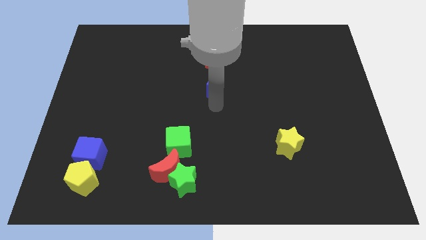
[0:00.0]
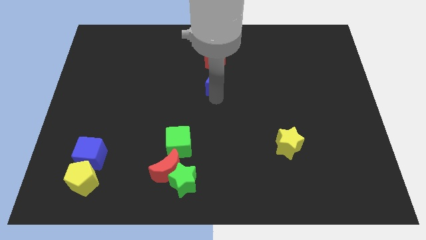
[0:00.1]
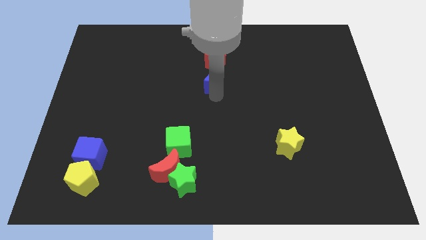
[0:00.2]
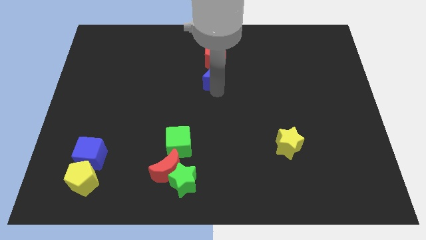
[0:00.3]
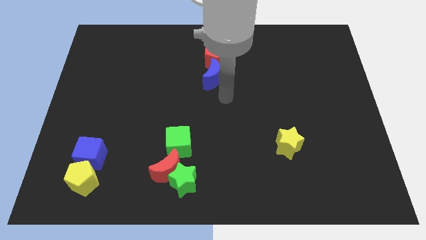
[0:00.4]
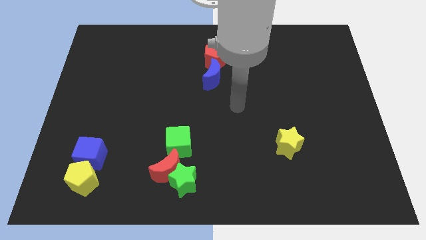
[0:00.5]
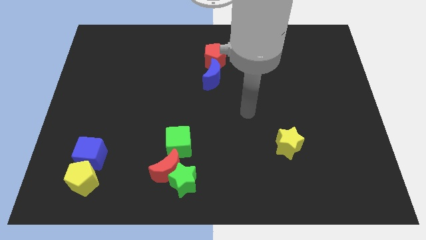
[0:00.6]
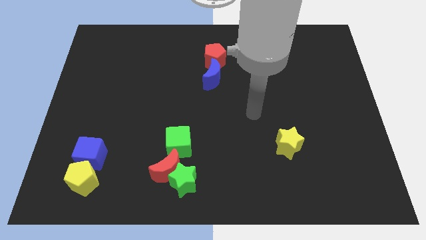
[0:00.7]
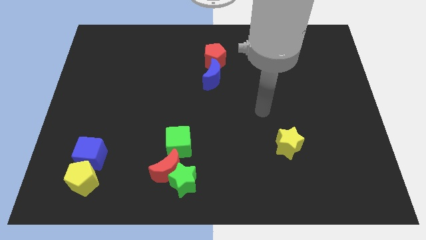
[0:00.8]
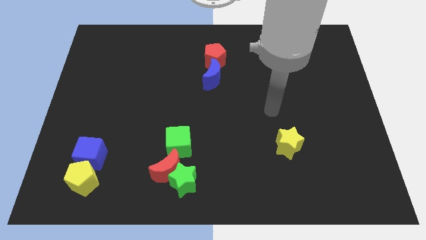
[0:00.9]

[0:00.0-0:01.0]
push blue moon in to red pentagon

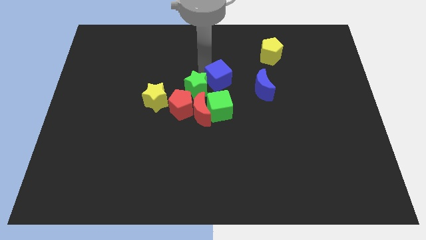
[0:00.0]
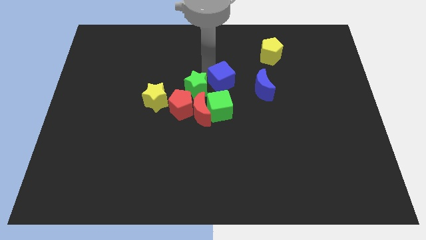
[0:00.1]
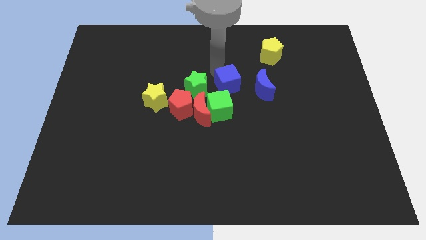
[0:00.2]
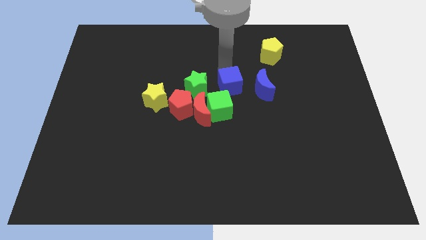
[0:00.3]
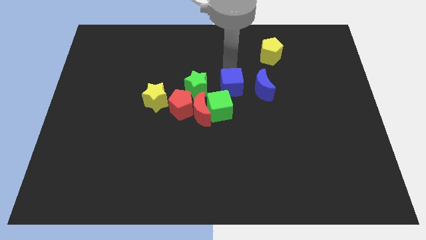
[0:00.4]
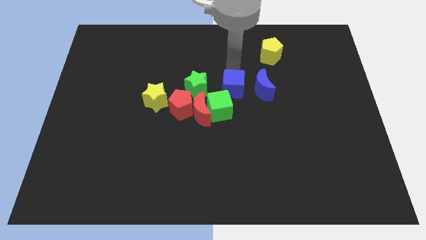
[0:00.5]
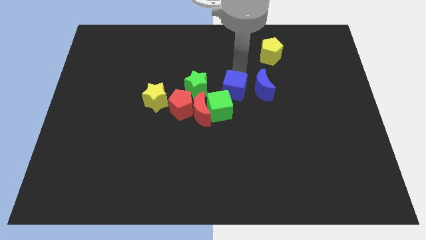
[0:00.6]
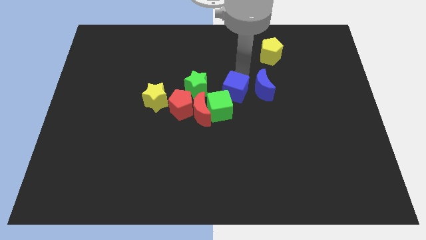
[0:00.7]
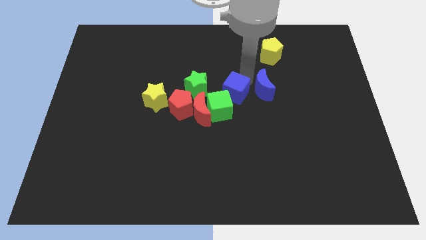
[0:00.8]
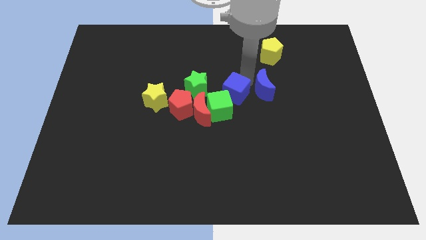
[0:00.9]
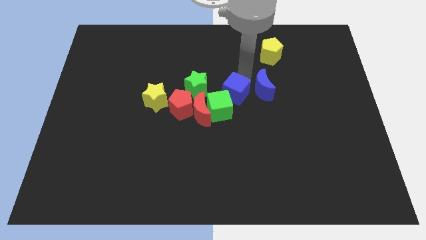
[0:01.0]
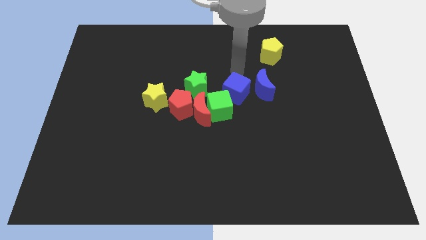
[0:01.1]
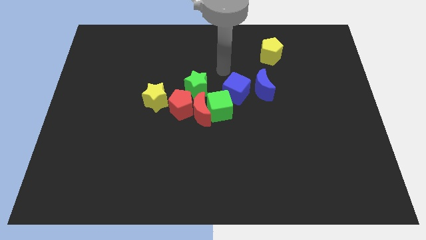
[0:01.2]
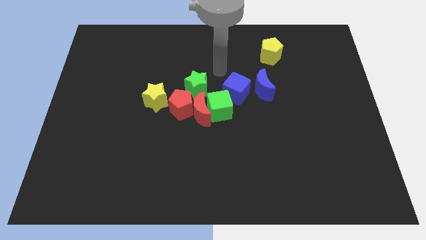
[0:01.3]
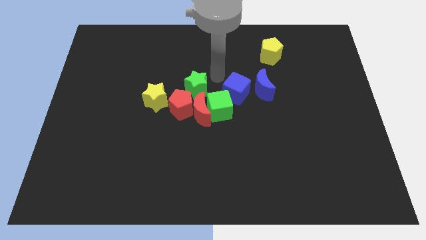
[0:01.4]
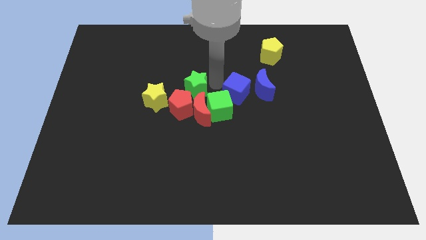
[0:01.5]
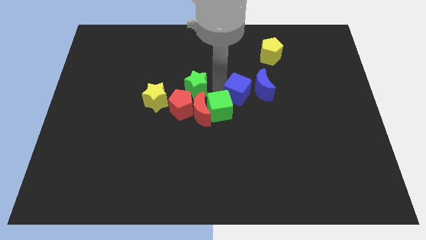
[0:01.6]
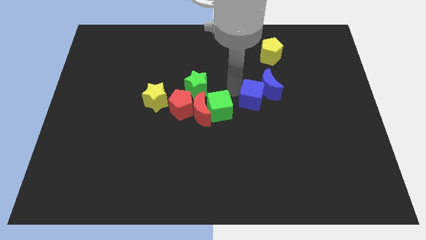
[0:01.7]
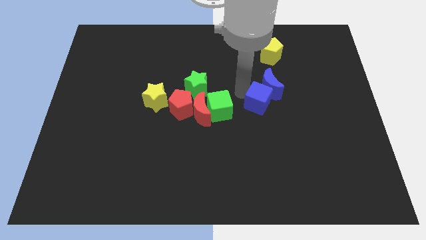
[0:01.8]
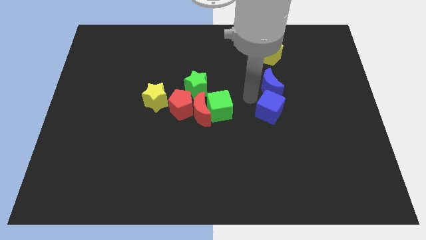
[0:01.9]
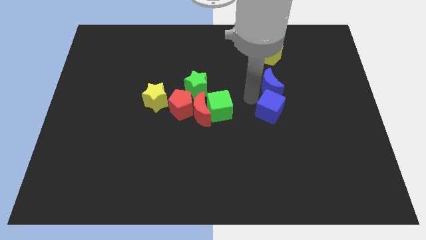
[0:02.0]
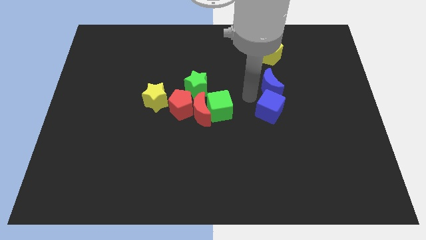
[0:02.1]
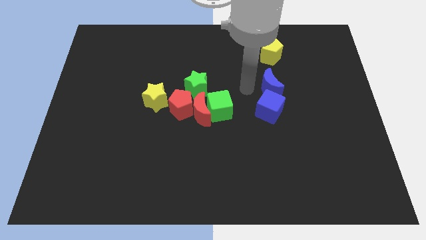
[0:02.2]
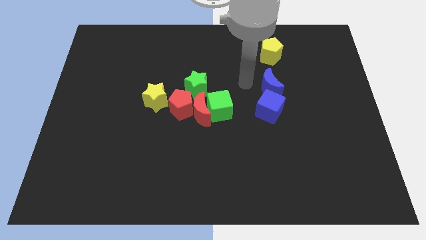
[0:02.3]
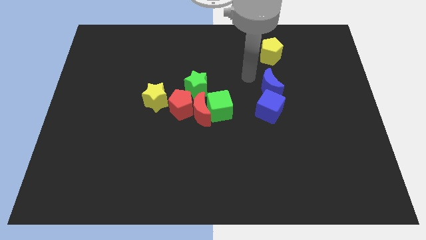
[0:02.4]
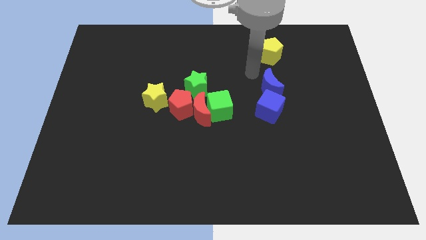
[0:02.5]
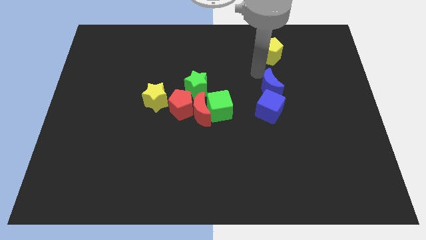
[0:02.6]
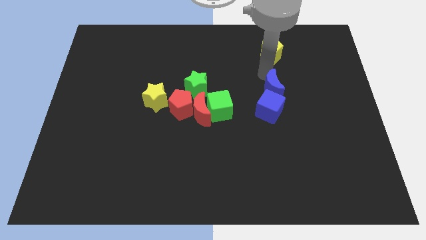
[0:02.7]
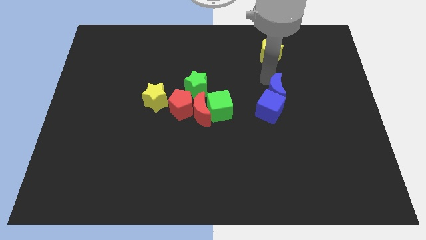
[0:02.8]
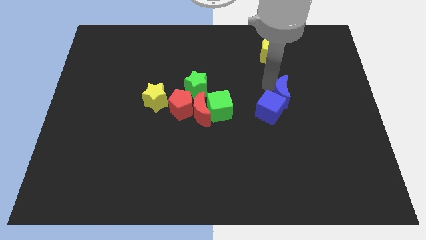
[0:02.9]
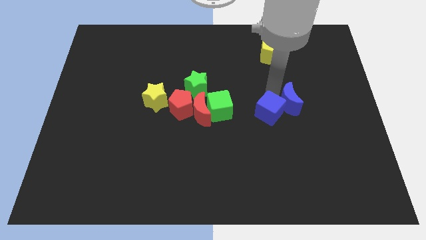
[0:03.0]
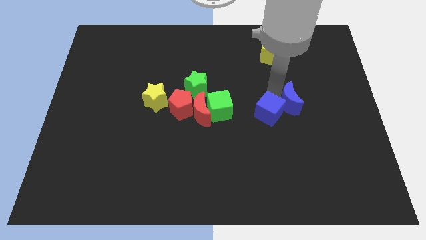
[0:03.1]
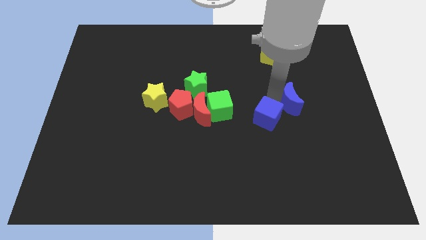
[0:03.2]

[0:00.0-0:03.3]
move the blue cube to the right of the green cube

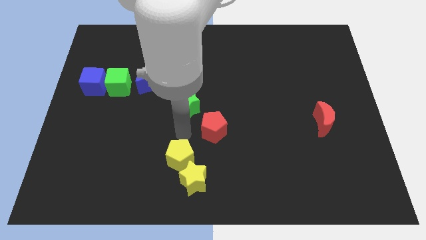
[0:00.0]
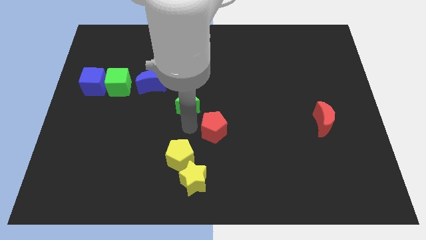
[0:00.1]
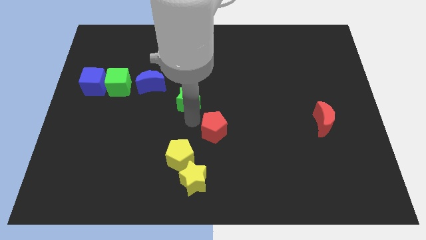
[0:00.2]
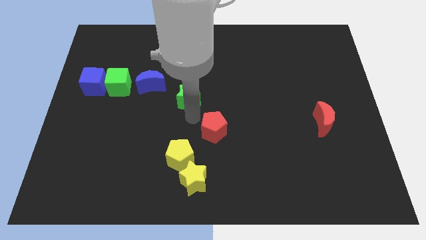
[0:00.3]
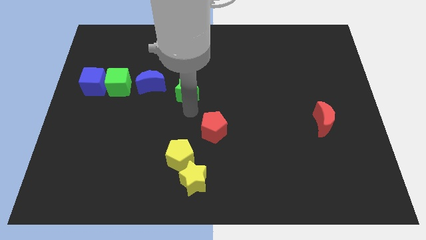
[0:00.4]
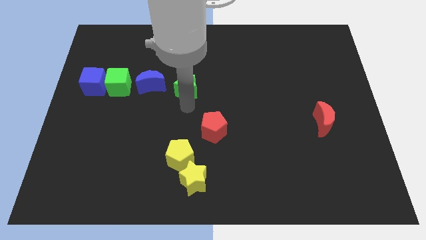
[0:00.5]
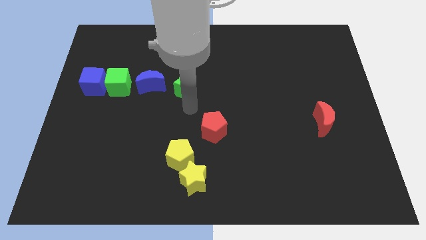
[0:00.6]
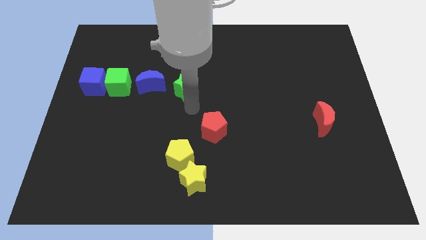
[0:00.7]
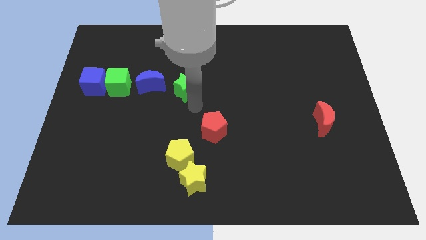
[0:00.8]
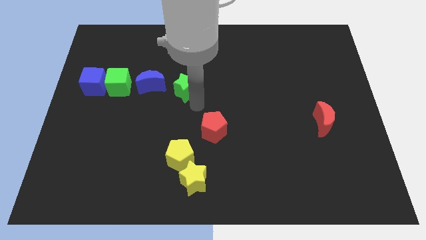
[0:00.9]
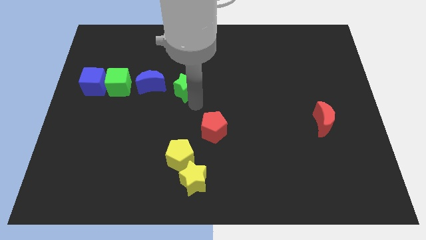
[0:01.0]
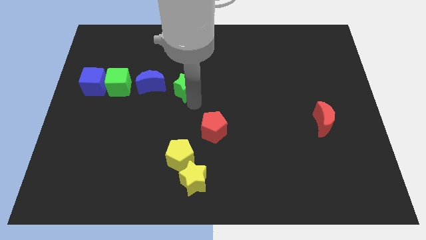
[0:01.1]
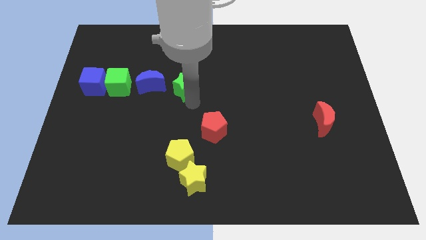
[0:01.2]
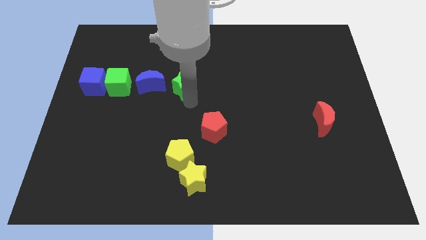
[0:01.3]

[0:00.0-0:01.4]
move the green star to the right of the blue crescent

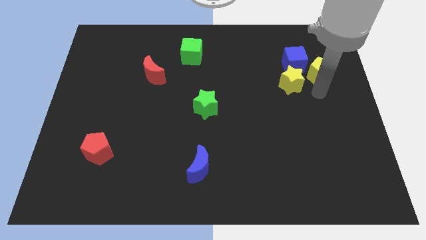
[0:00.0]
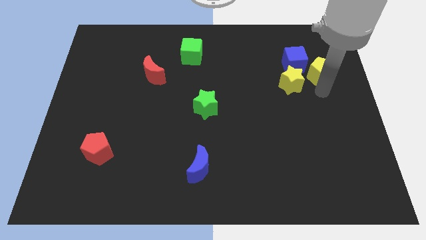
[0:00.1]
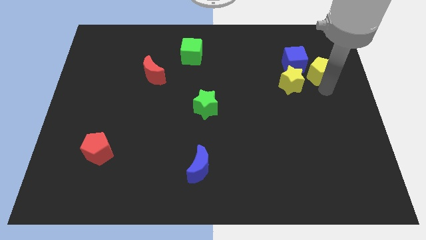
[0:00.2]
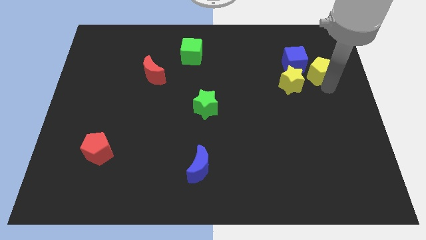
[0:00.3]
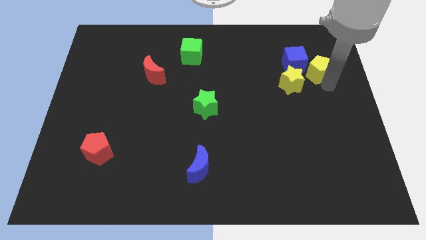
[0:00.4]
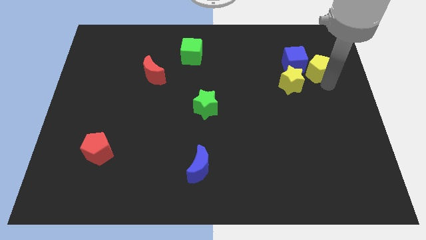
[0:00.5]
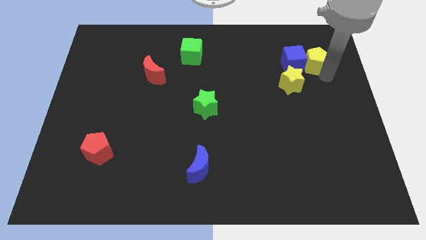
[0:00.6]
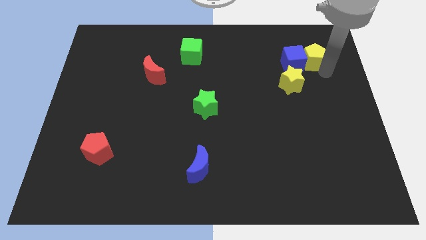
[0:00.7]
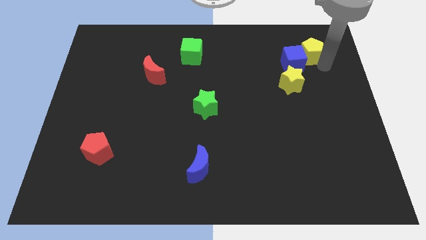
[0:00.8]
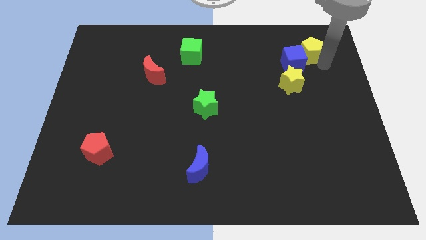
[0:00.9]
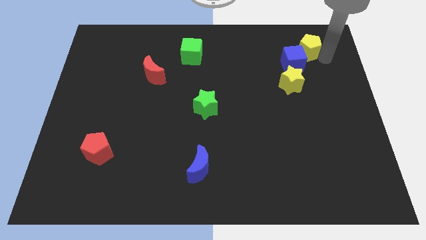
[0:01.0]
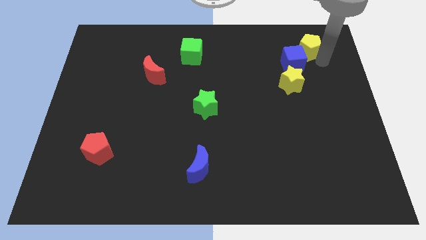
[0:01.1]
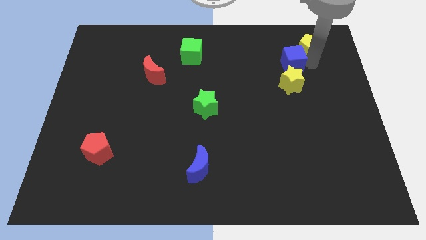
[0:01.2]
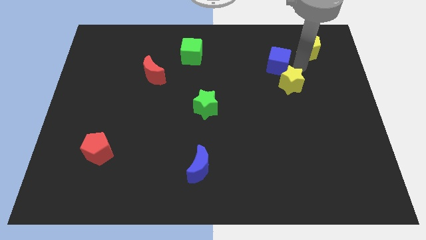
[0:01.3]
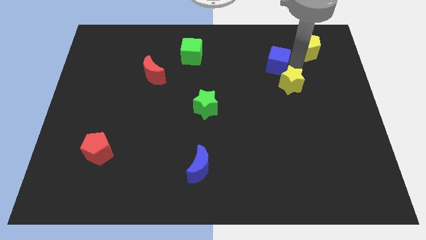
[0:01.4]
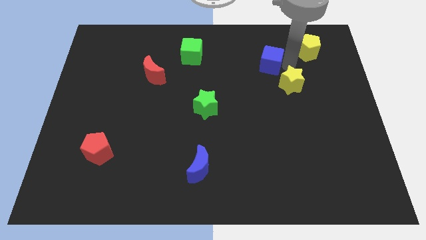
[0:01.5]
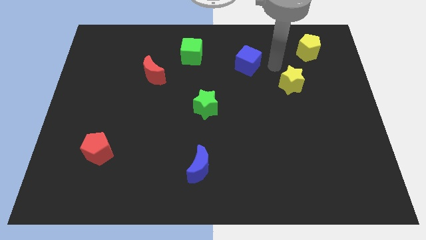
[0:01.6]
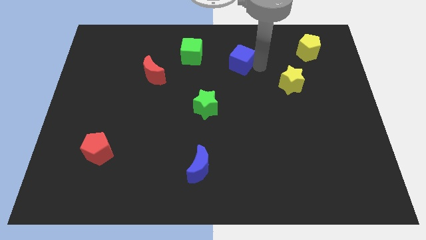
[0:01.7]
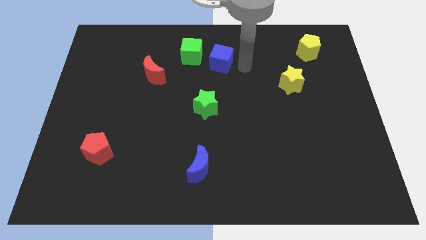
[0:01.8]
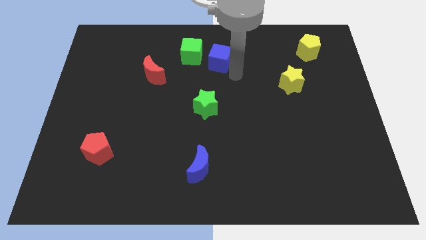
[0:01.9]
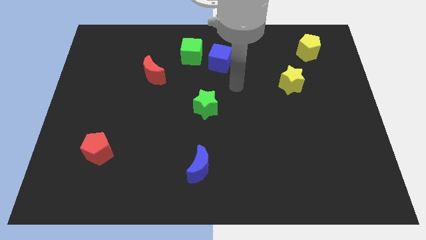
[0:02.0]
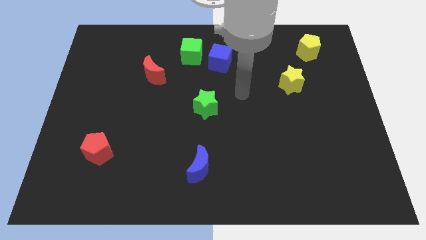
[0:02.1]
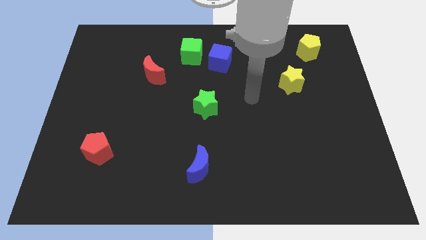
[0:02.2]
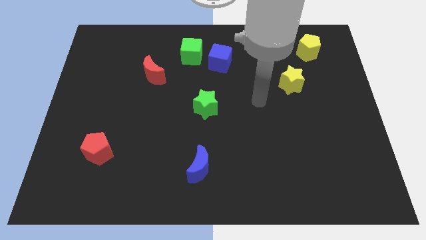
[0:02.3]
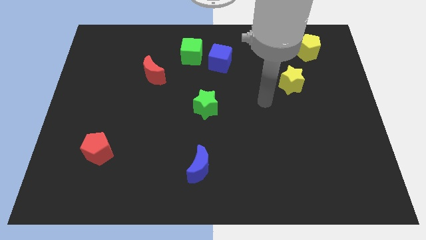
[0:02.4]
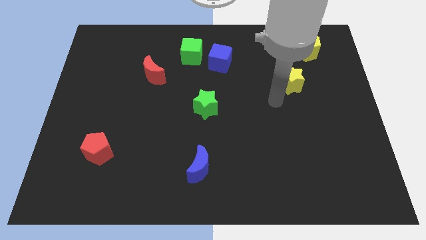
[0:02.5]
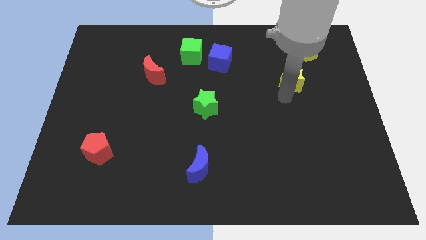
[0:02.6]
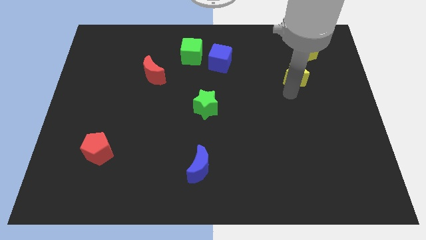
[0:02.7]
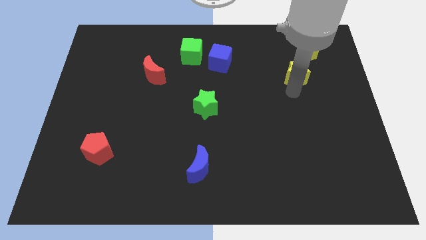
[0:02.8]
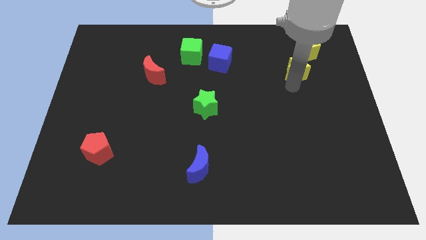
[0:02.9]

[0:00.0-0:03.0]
place the blue cube right to the green cube

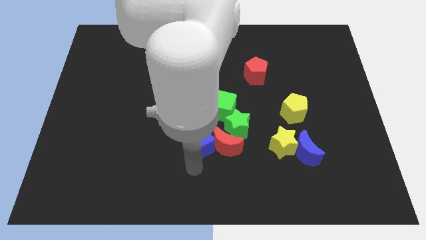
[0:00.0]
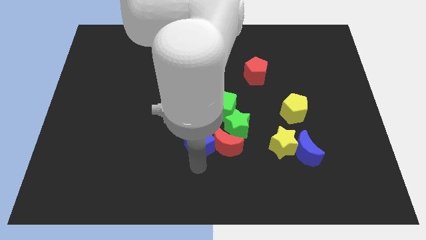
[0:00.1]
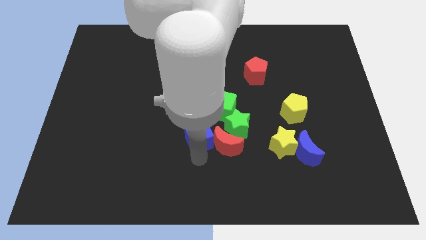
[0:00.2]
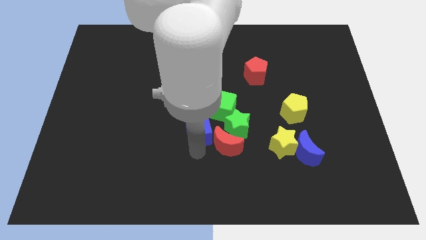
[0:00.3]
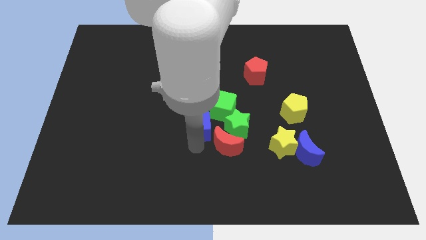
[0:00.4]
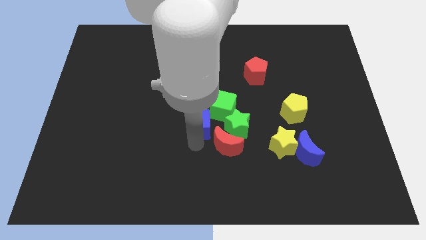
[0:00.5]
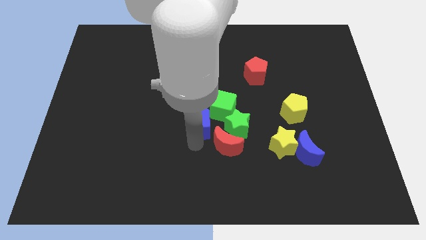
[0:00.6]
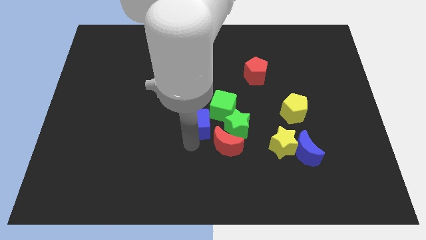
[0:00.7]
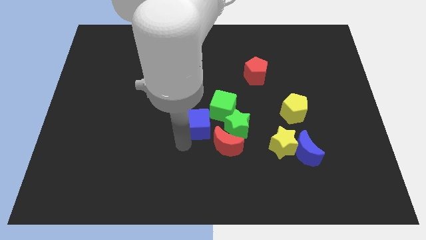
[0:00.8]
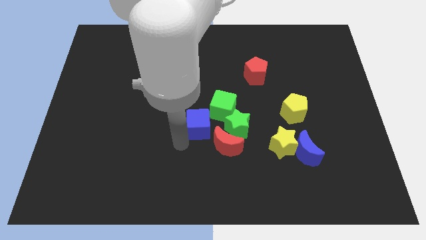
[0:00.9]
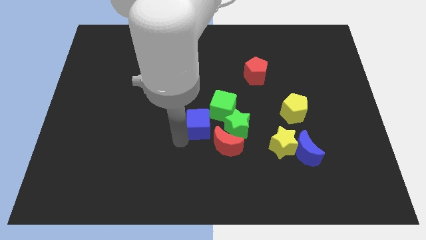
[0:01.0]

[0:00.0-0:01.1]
push blue cube slightly upwards
